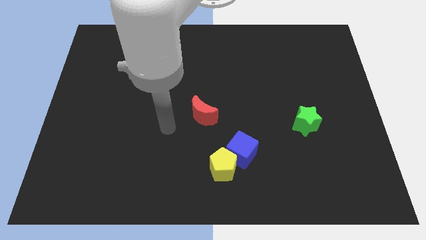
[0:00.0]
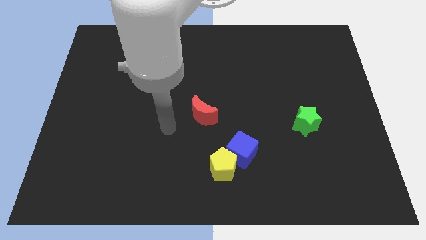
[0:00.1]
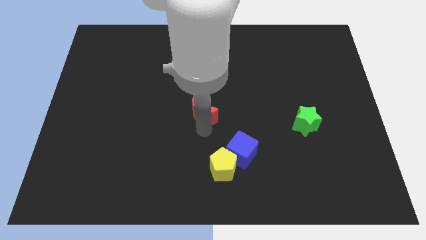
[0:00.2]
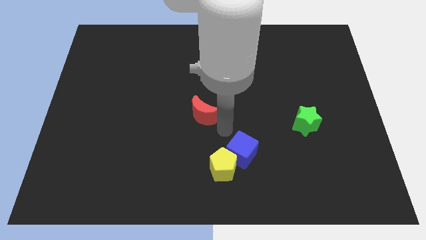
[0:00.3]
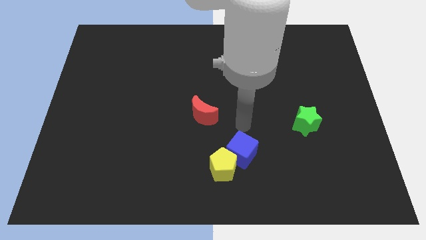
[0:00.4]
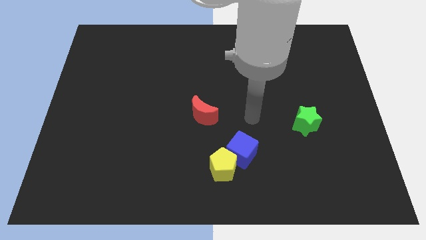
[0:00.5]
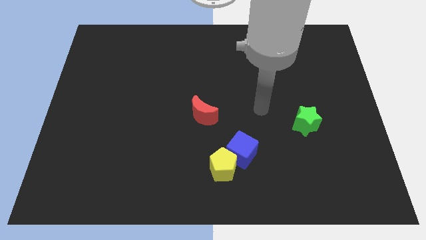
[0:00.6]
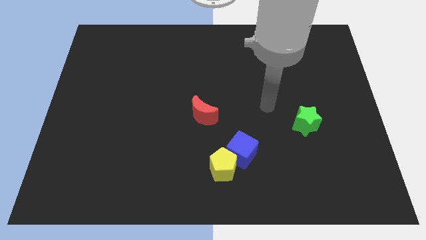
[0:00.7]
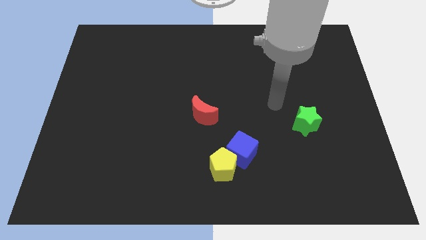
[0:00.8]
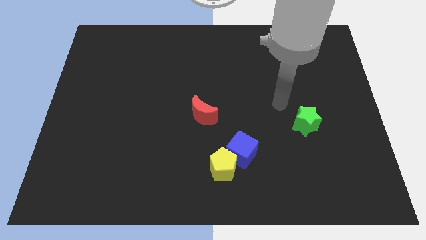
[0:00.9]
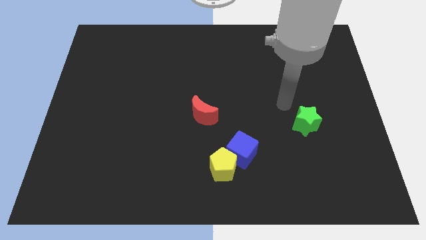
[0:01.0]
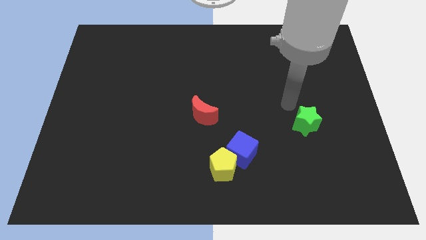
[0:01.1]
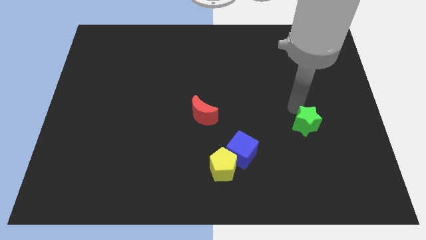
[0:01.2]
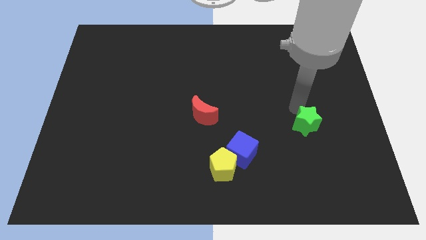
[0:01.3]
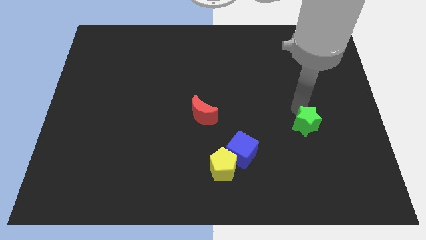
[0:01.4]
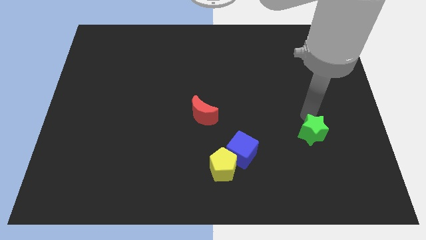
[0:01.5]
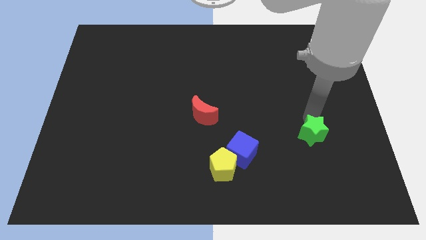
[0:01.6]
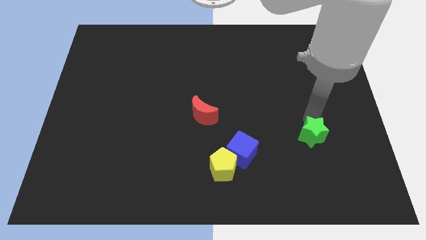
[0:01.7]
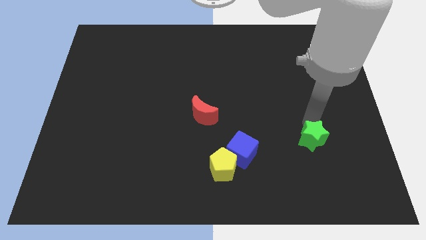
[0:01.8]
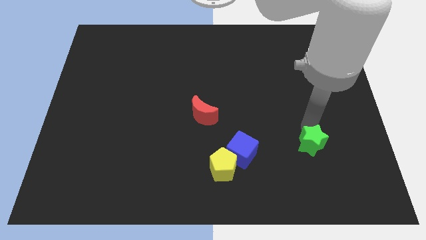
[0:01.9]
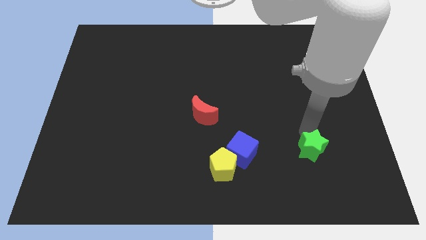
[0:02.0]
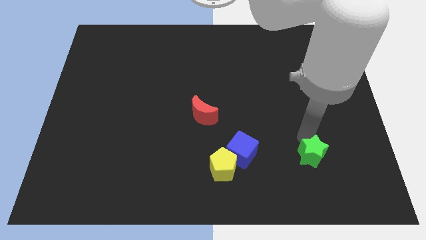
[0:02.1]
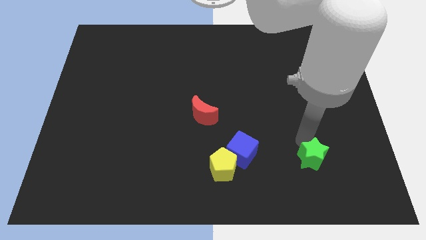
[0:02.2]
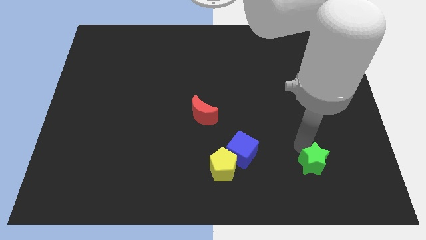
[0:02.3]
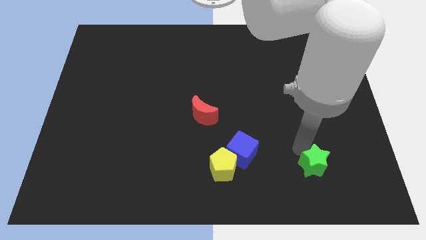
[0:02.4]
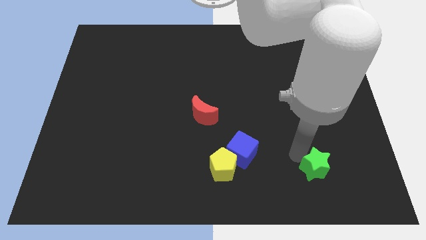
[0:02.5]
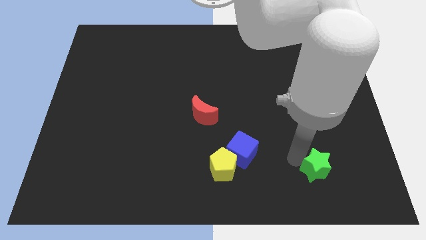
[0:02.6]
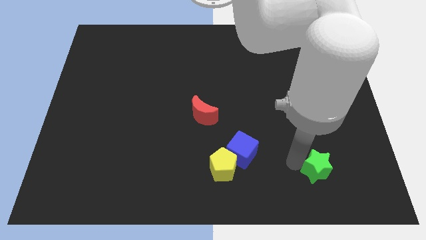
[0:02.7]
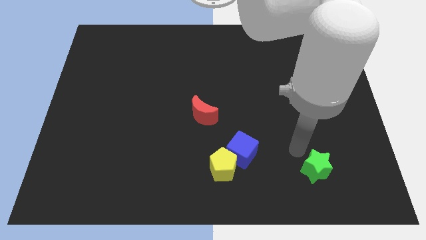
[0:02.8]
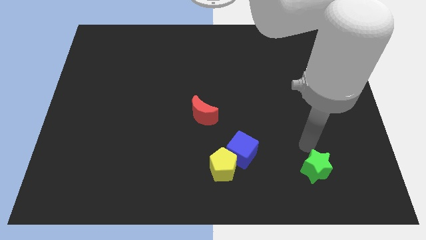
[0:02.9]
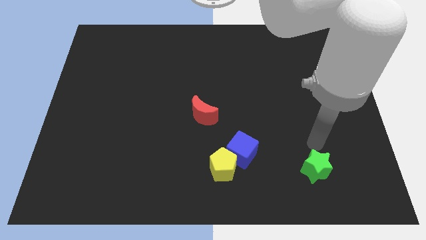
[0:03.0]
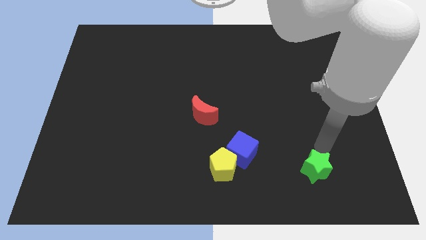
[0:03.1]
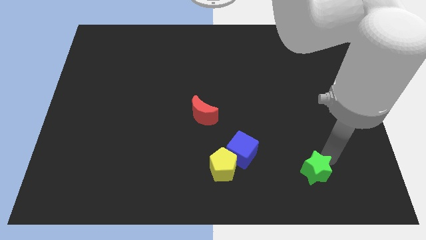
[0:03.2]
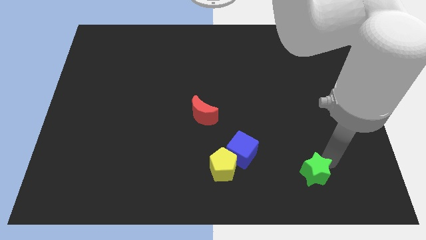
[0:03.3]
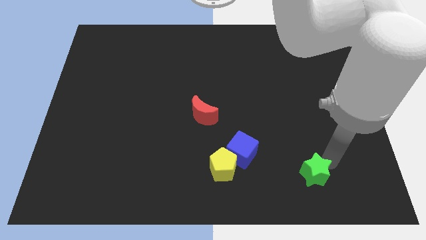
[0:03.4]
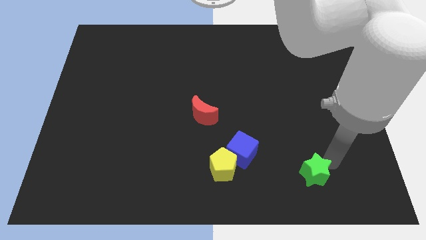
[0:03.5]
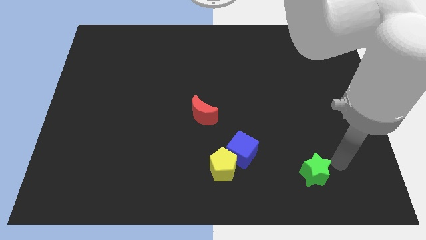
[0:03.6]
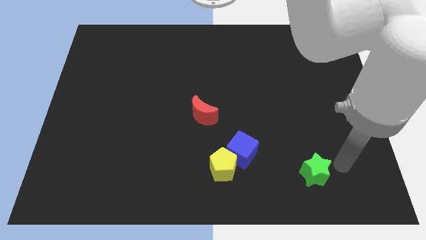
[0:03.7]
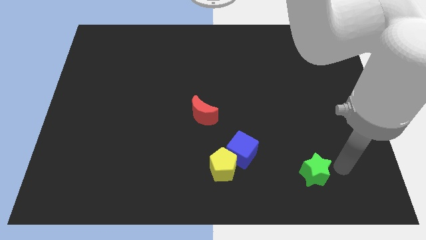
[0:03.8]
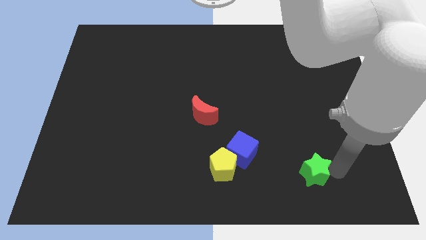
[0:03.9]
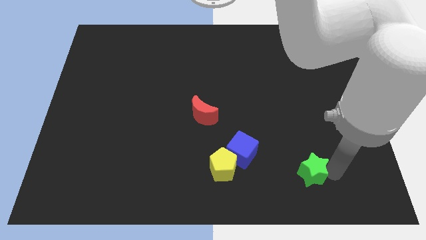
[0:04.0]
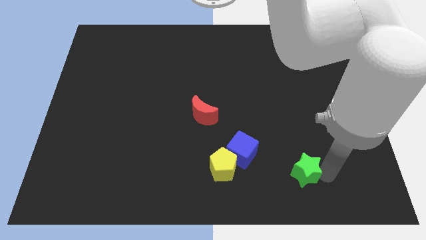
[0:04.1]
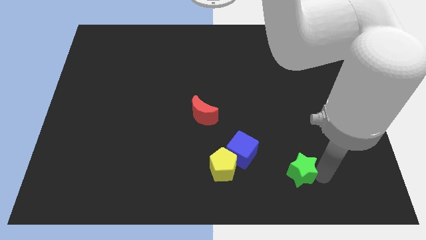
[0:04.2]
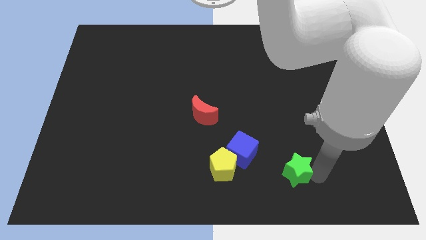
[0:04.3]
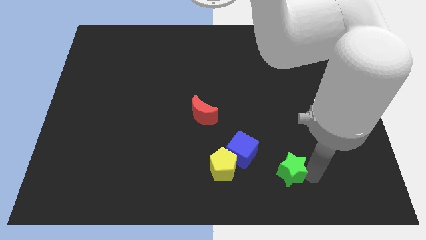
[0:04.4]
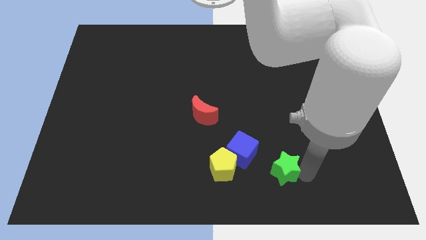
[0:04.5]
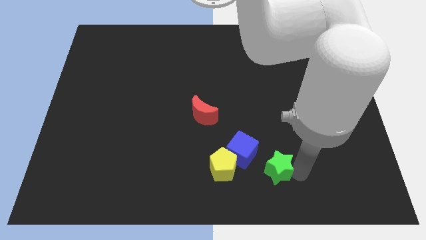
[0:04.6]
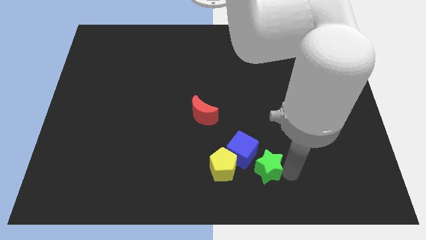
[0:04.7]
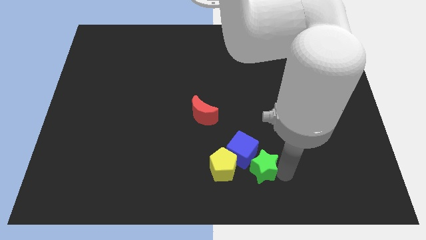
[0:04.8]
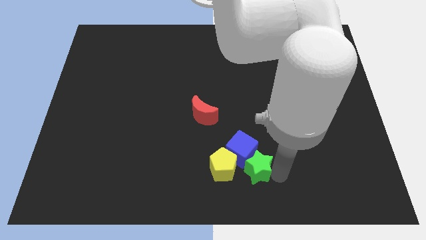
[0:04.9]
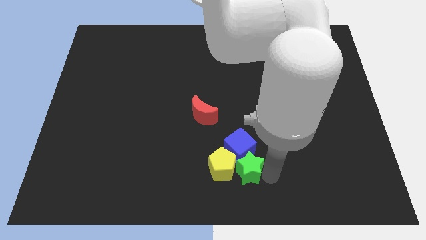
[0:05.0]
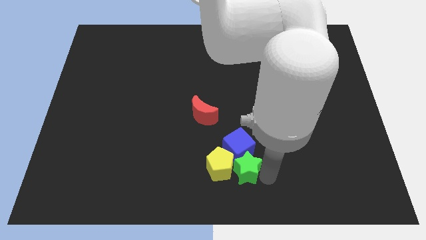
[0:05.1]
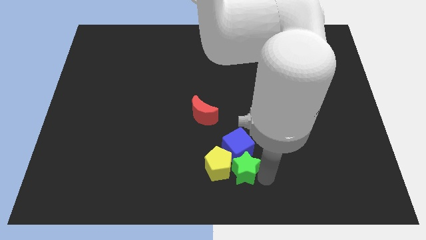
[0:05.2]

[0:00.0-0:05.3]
slide the green block to the yellow block

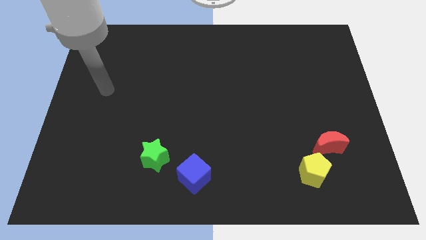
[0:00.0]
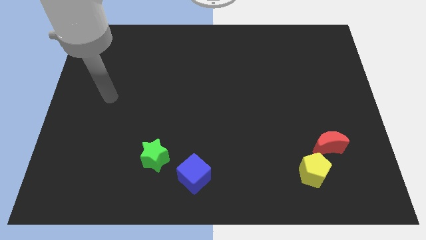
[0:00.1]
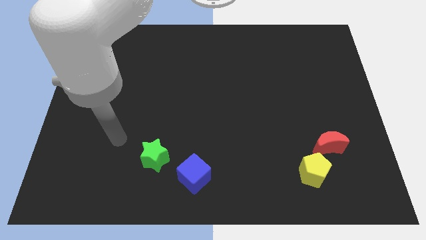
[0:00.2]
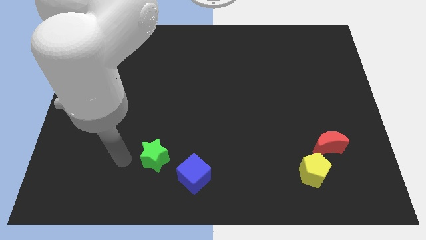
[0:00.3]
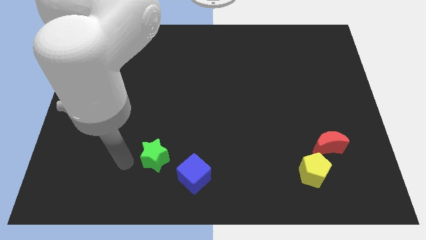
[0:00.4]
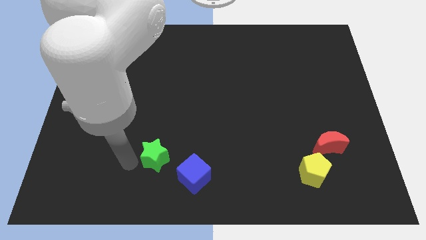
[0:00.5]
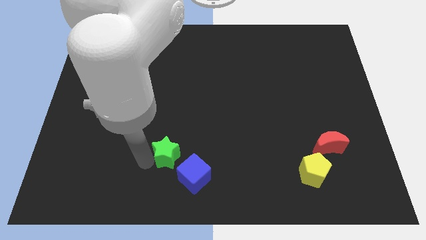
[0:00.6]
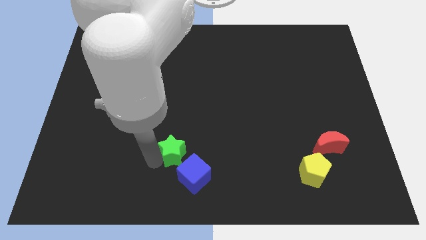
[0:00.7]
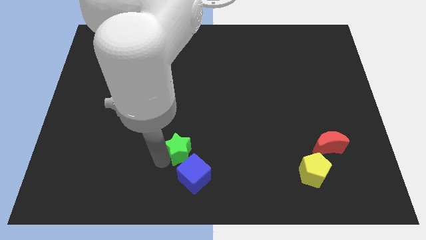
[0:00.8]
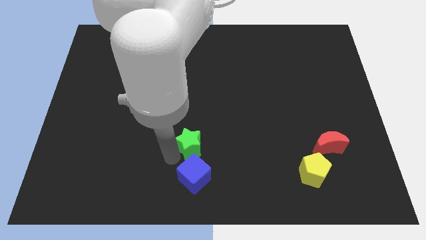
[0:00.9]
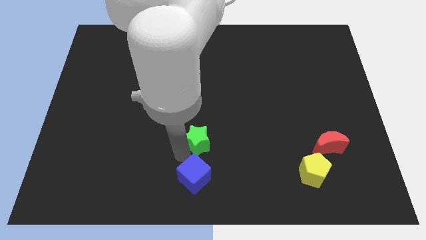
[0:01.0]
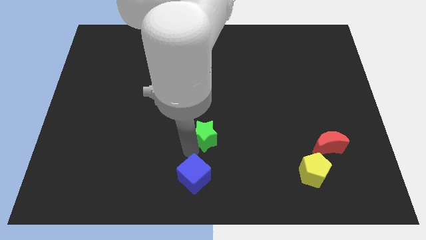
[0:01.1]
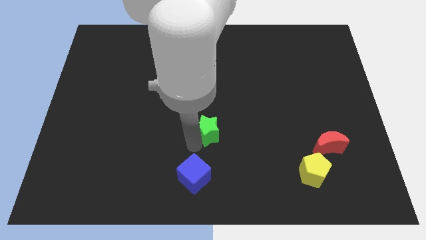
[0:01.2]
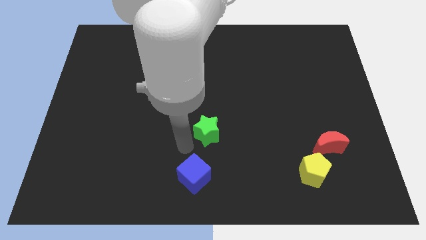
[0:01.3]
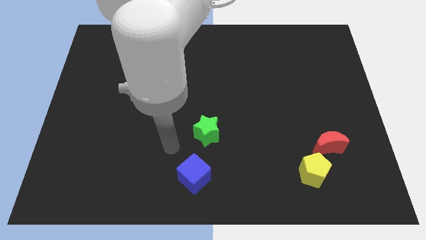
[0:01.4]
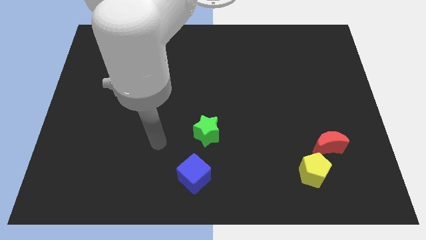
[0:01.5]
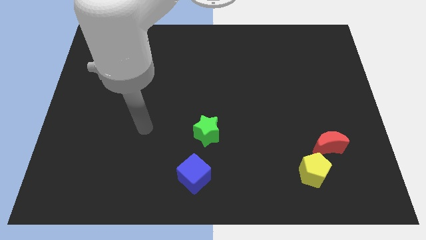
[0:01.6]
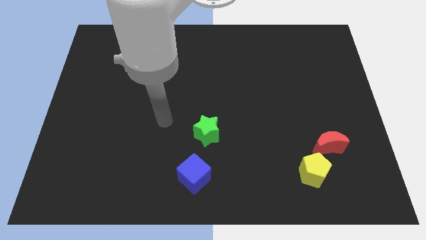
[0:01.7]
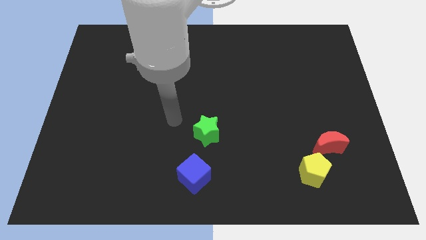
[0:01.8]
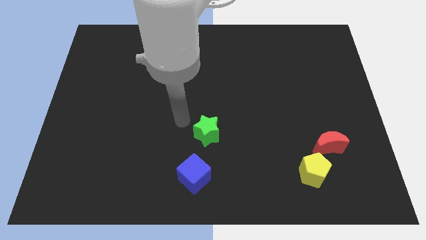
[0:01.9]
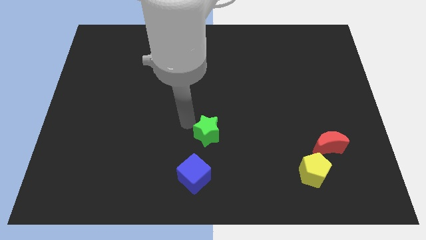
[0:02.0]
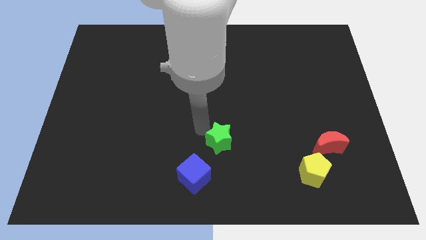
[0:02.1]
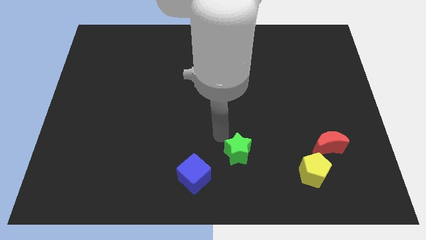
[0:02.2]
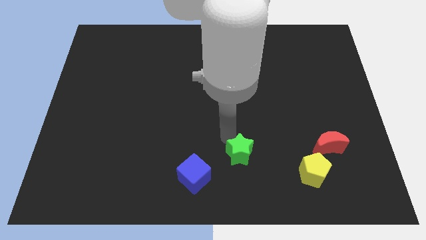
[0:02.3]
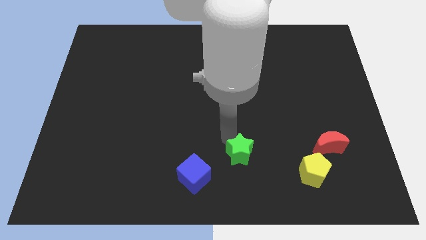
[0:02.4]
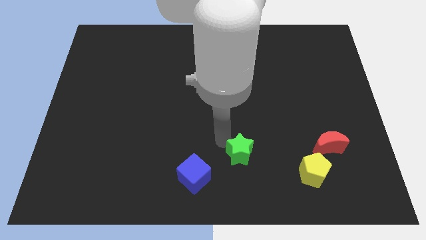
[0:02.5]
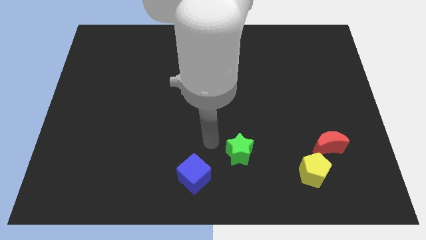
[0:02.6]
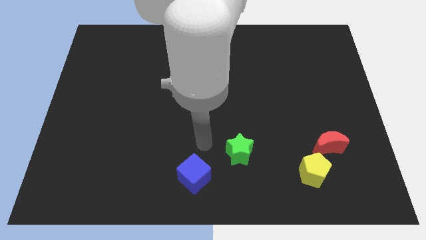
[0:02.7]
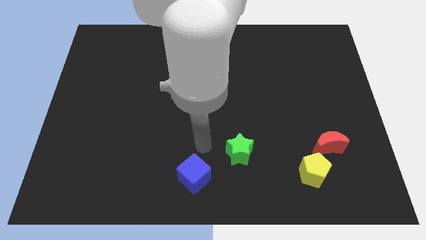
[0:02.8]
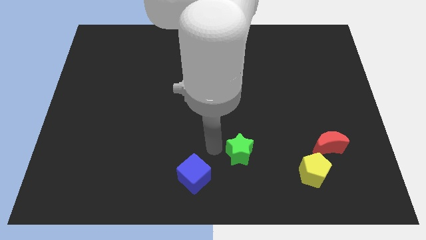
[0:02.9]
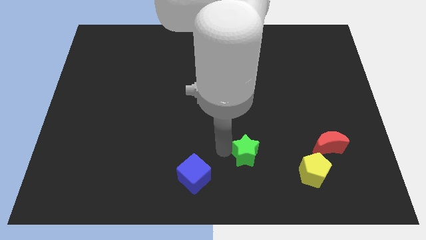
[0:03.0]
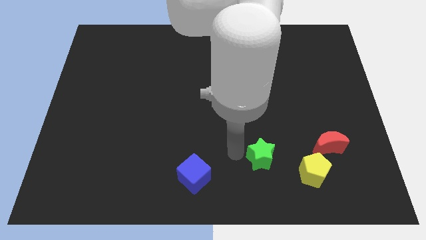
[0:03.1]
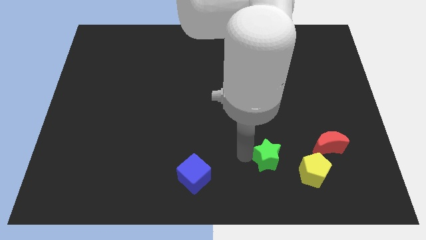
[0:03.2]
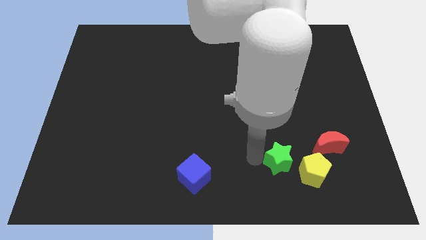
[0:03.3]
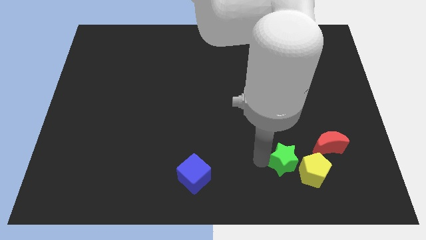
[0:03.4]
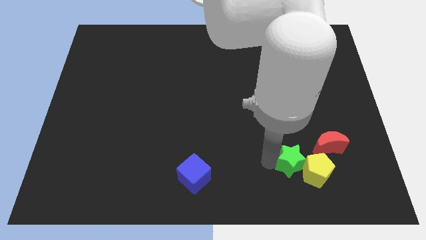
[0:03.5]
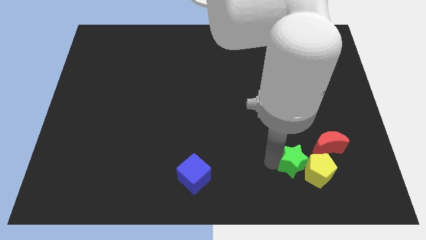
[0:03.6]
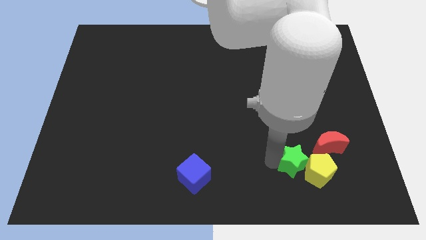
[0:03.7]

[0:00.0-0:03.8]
slide the star to the yellow block
